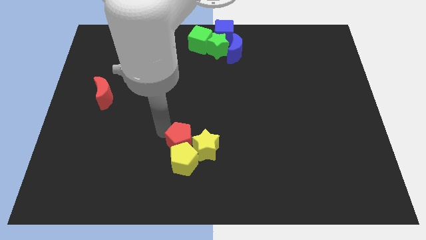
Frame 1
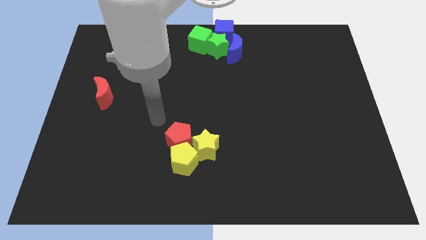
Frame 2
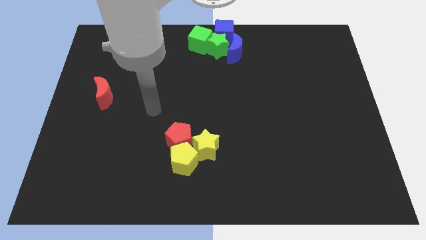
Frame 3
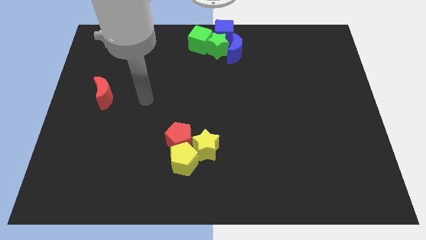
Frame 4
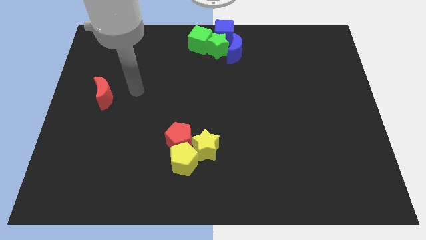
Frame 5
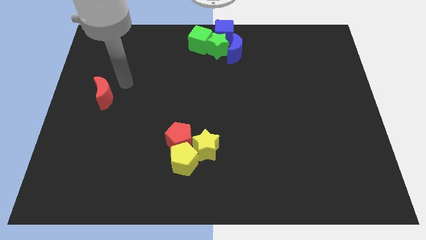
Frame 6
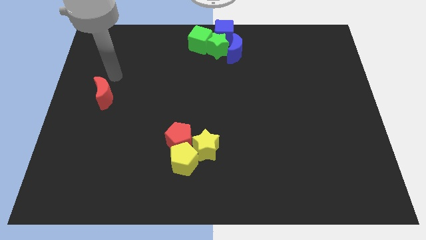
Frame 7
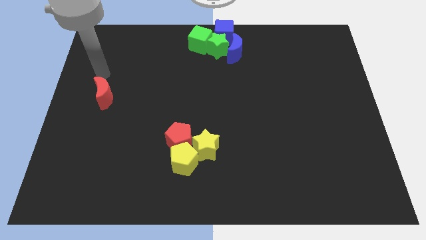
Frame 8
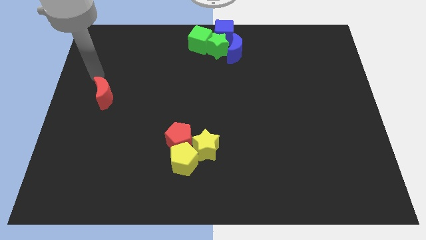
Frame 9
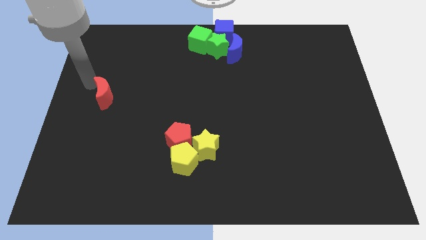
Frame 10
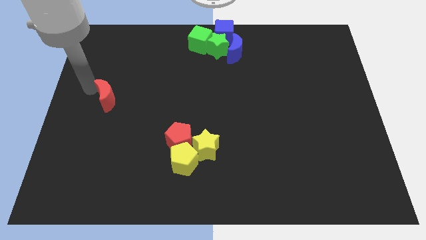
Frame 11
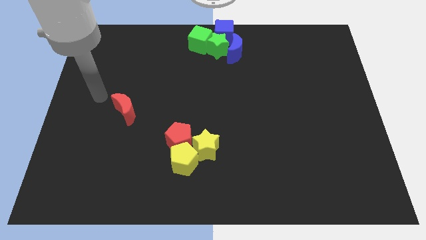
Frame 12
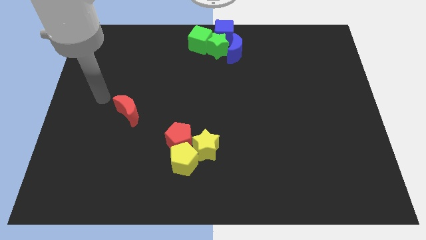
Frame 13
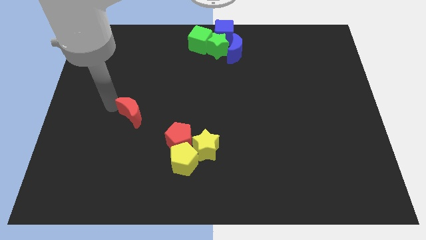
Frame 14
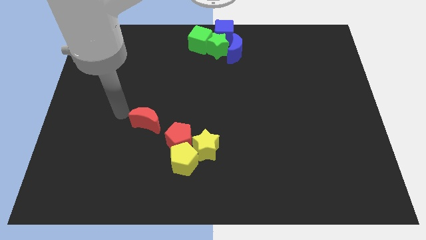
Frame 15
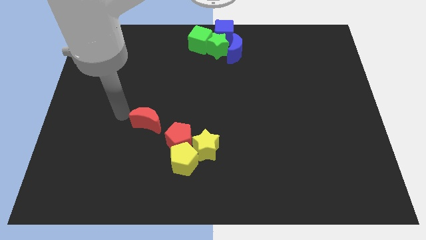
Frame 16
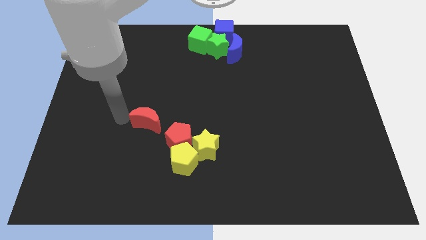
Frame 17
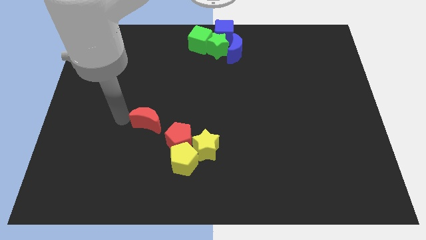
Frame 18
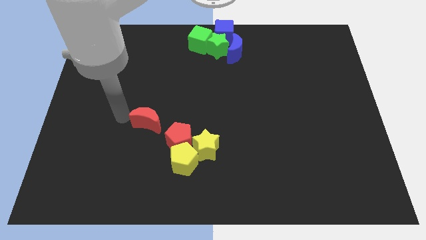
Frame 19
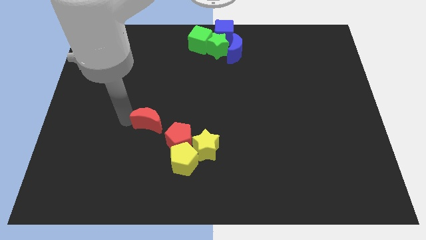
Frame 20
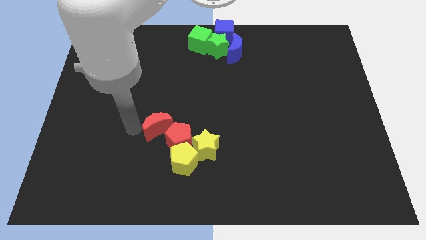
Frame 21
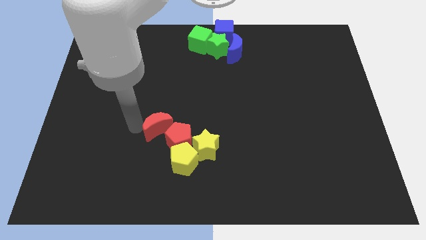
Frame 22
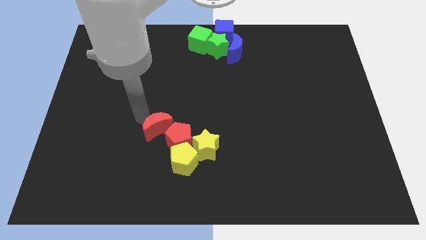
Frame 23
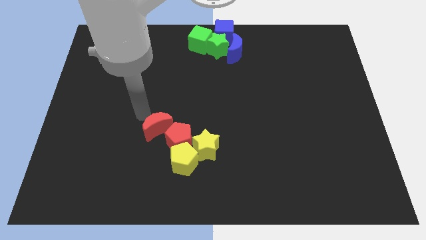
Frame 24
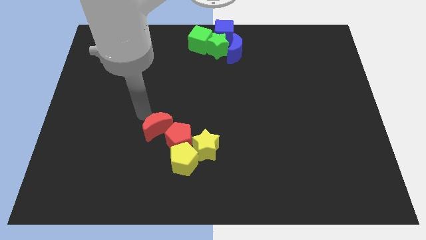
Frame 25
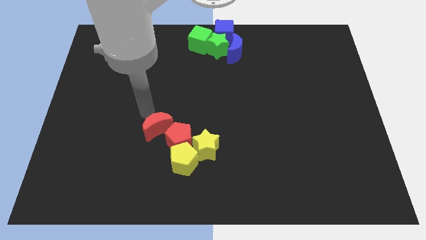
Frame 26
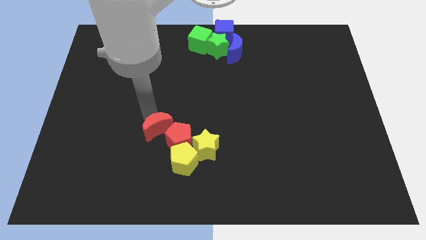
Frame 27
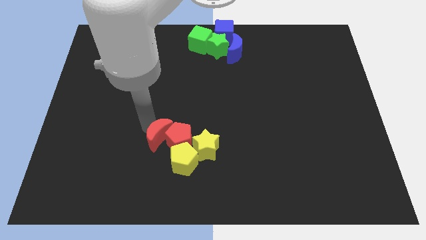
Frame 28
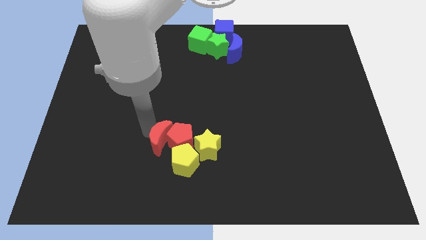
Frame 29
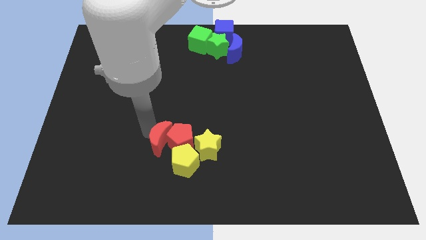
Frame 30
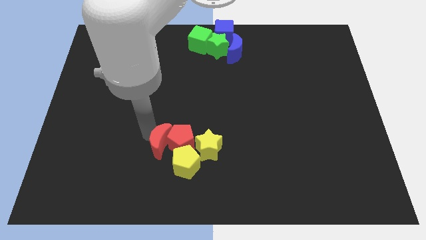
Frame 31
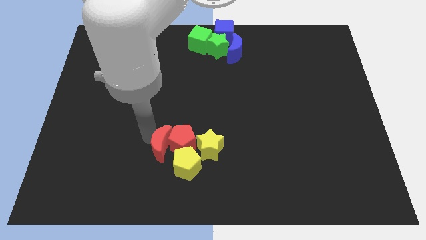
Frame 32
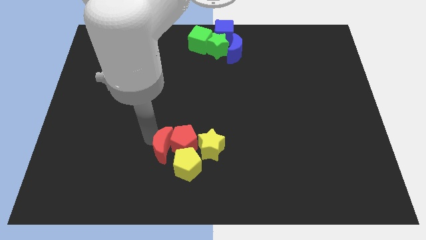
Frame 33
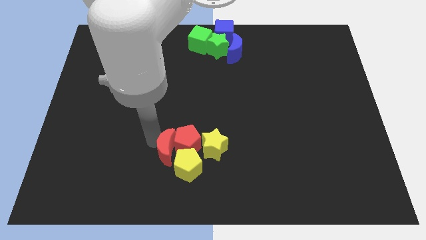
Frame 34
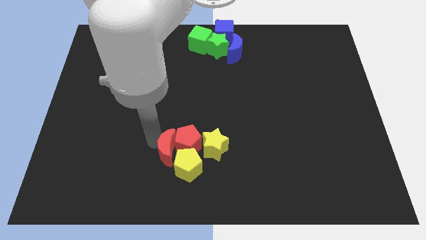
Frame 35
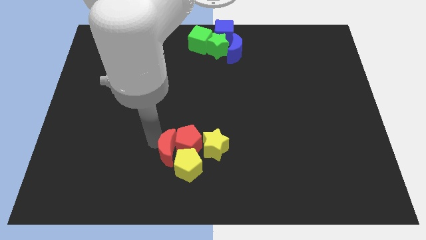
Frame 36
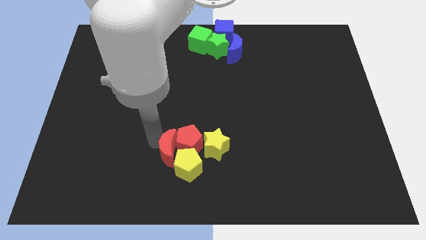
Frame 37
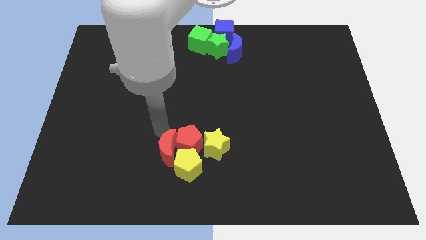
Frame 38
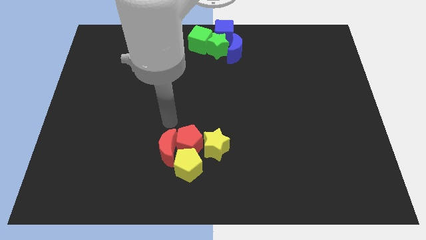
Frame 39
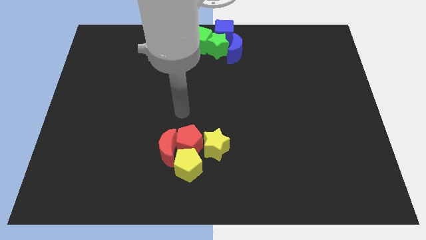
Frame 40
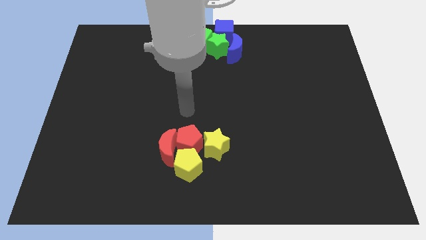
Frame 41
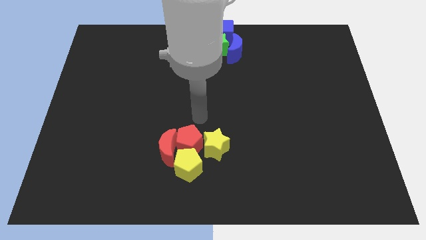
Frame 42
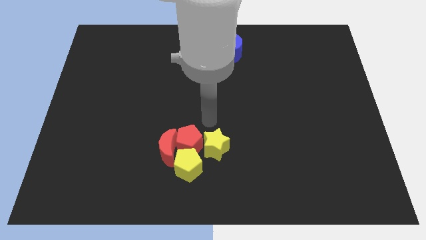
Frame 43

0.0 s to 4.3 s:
slightly move the red moon to the left side of the red pentagon and yellow pentagon

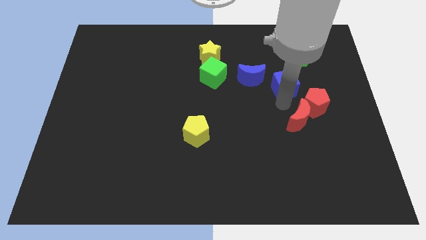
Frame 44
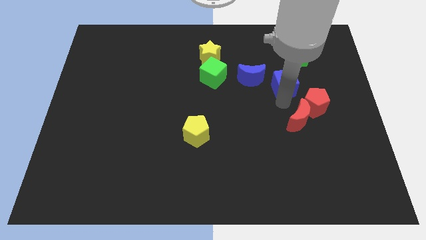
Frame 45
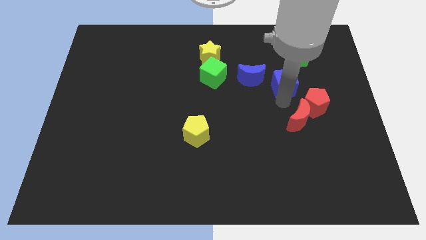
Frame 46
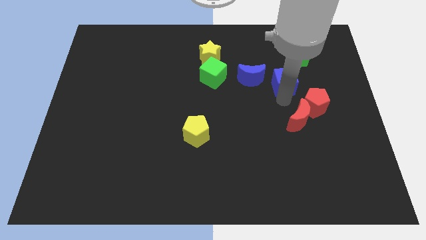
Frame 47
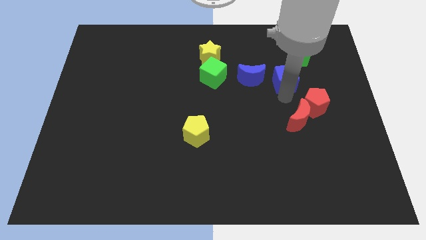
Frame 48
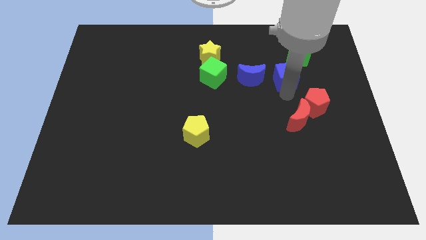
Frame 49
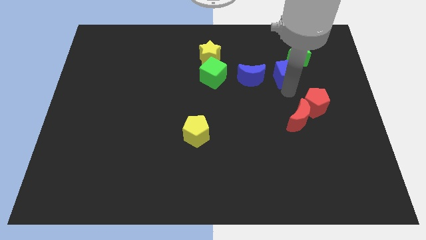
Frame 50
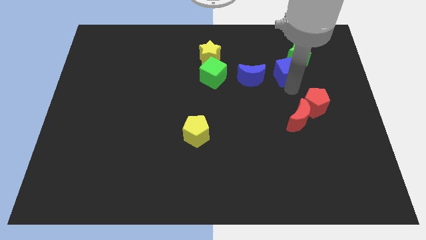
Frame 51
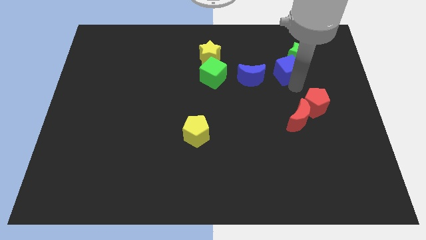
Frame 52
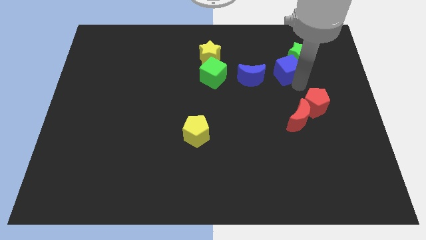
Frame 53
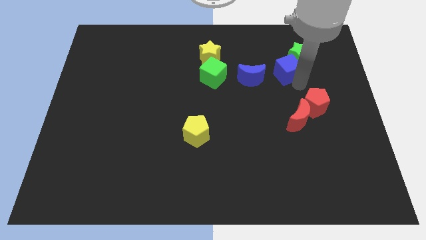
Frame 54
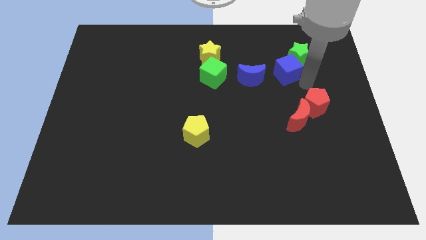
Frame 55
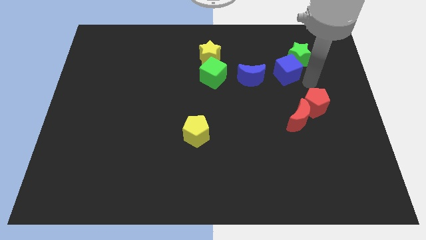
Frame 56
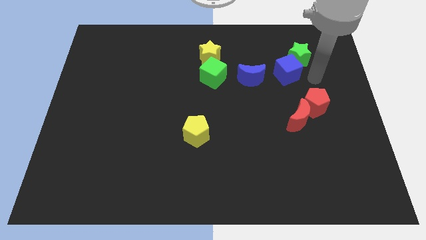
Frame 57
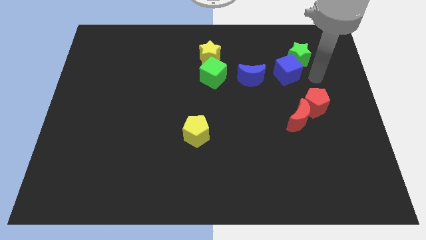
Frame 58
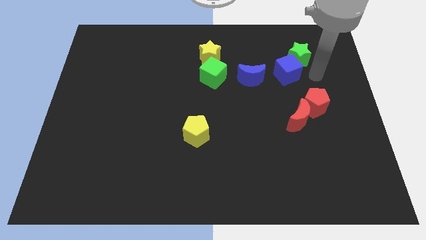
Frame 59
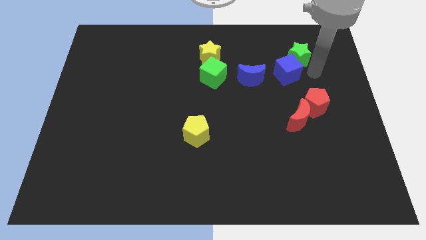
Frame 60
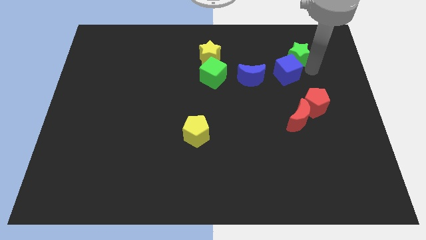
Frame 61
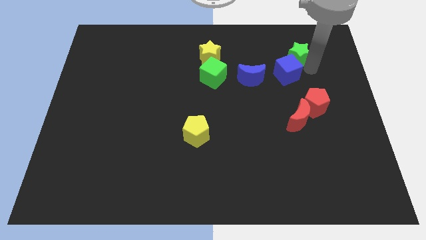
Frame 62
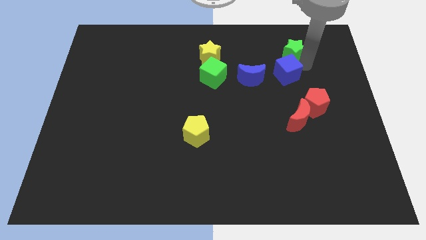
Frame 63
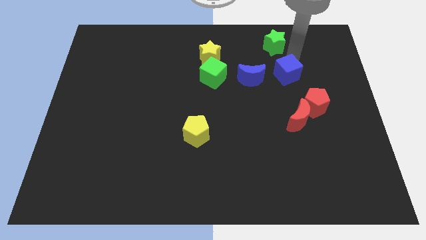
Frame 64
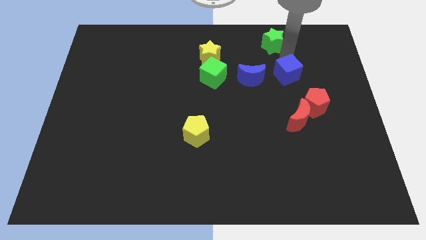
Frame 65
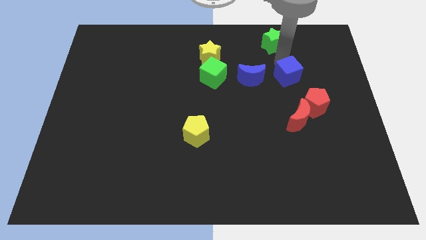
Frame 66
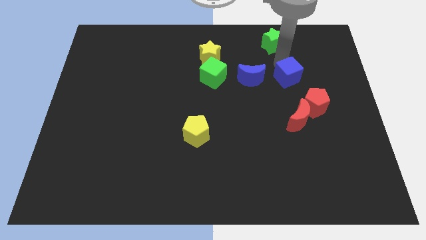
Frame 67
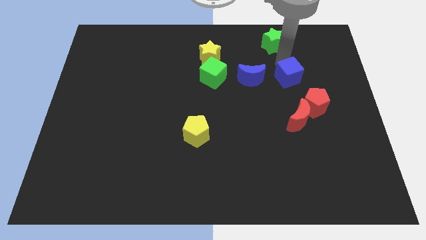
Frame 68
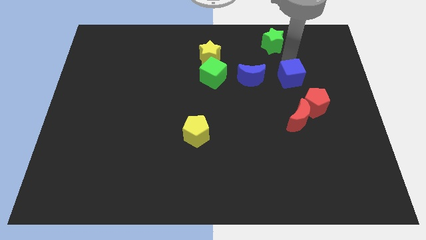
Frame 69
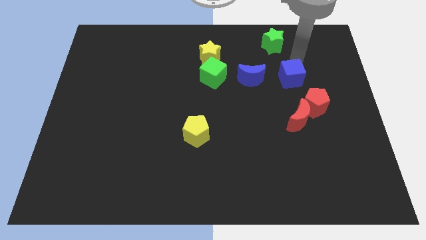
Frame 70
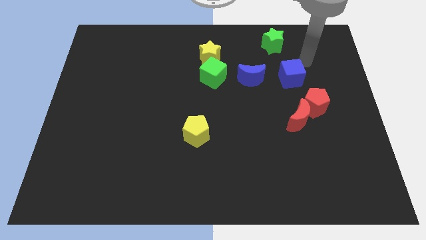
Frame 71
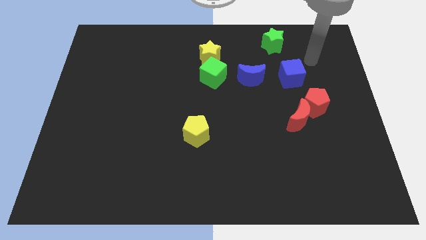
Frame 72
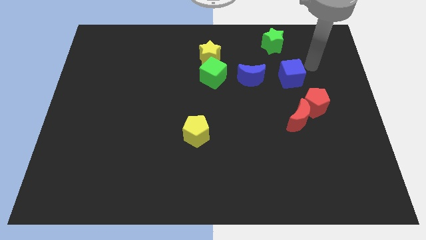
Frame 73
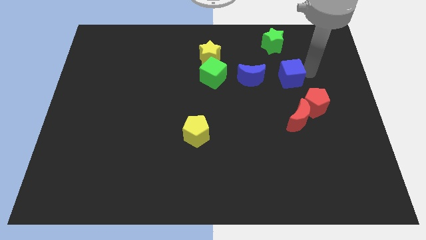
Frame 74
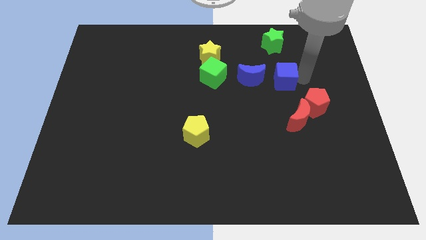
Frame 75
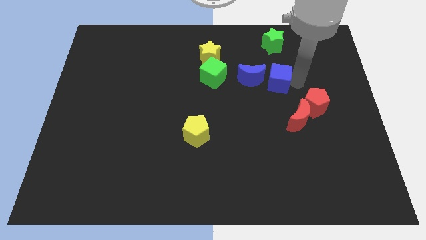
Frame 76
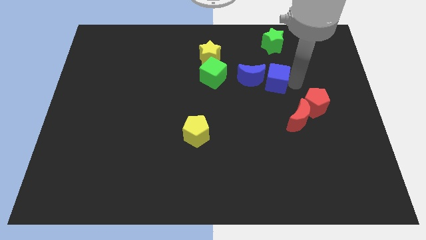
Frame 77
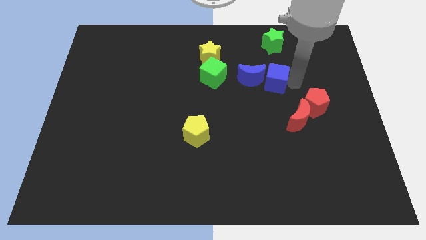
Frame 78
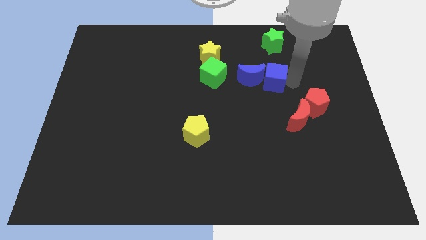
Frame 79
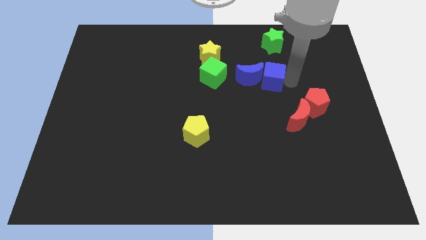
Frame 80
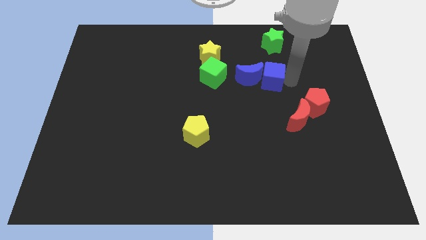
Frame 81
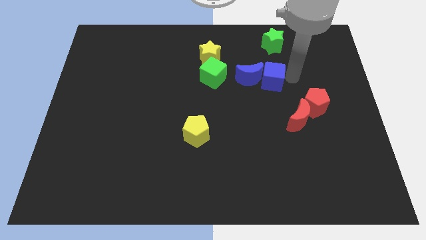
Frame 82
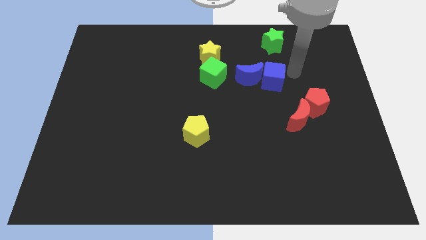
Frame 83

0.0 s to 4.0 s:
place the blue cube close to blue crescent

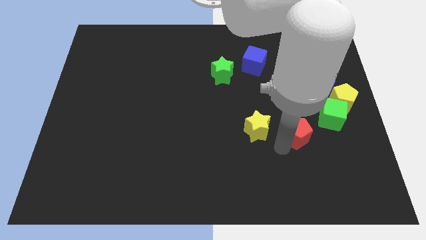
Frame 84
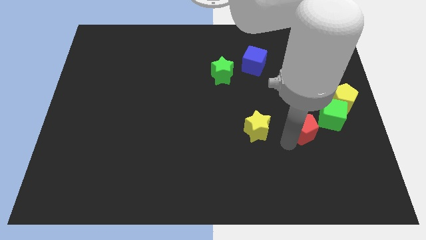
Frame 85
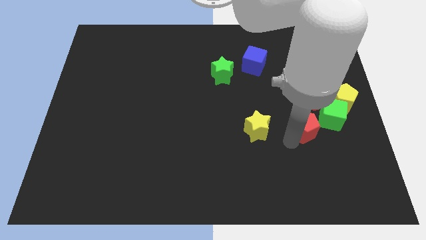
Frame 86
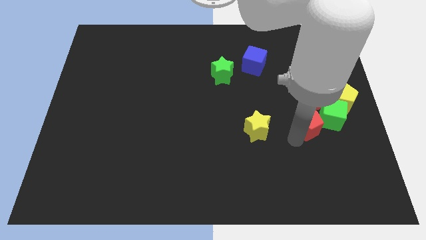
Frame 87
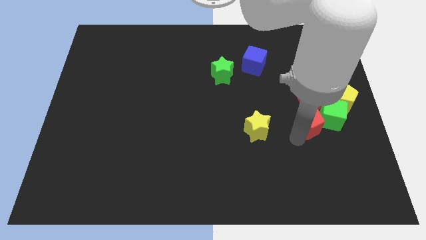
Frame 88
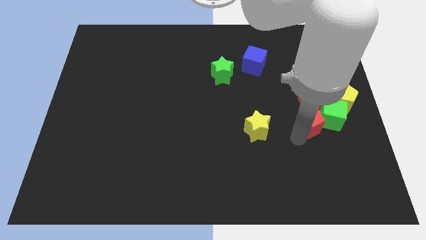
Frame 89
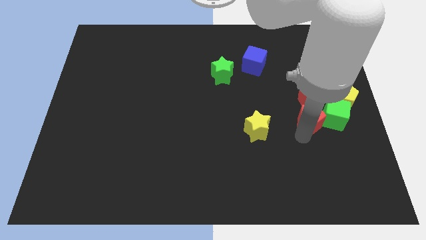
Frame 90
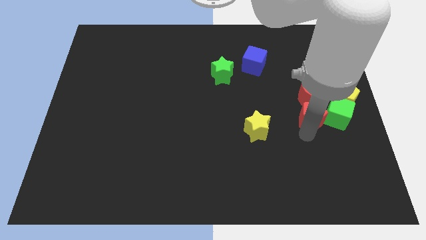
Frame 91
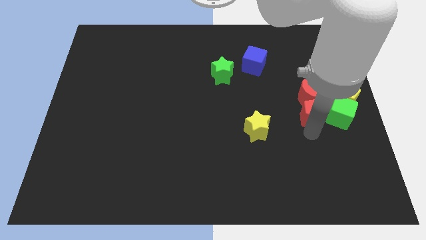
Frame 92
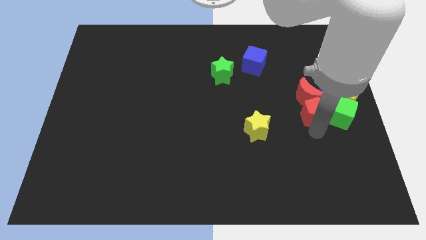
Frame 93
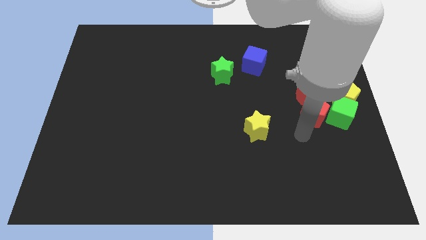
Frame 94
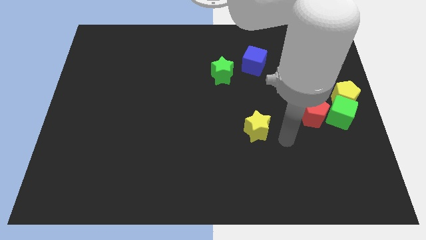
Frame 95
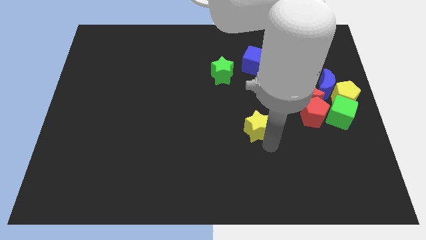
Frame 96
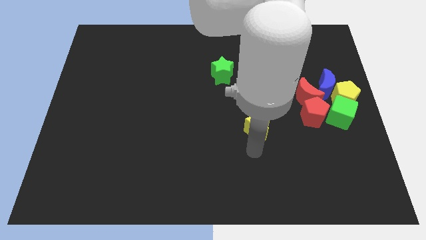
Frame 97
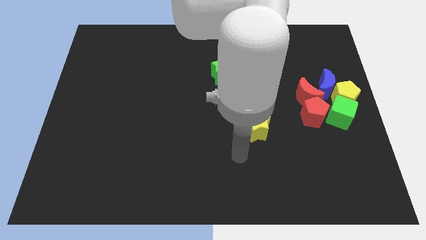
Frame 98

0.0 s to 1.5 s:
push the red pentagon into the green cube
